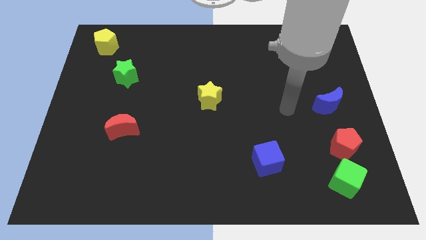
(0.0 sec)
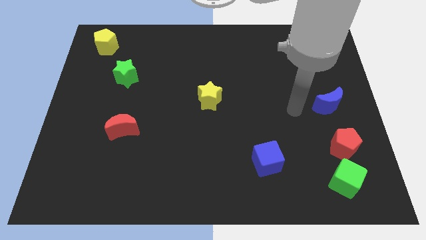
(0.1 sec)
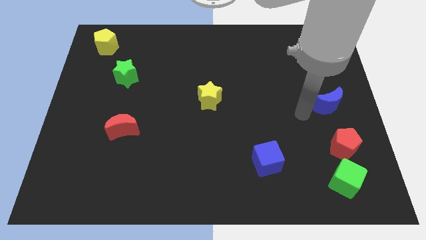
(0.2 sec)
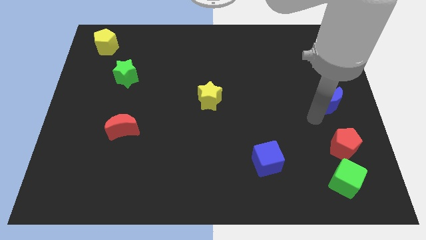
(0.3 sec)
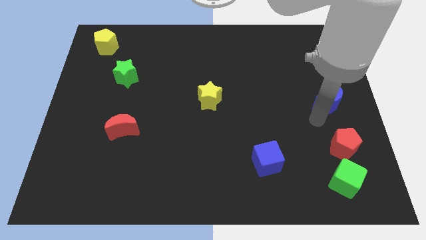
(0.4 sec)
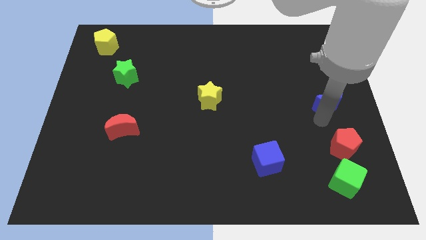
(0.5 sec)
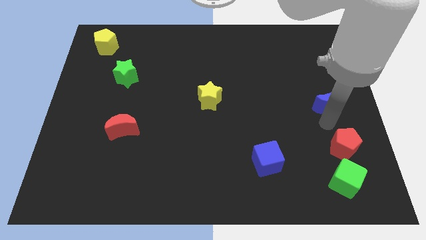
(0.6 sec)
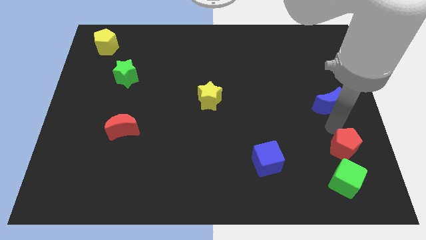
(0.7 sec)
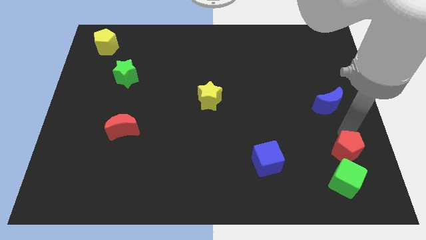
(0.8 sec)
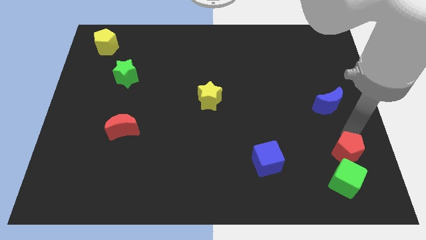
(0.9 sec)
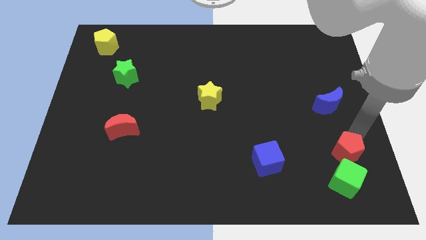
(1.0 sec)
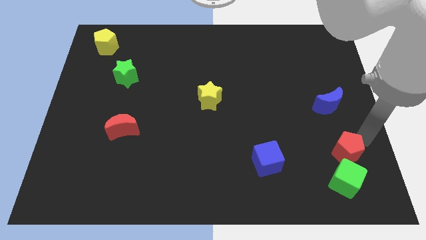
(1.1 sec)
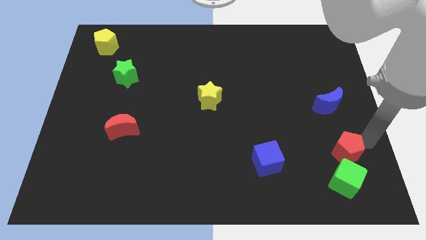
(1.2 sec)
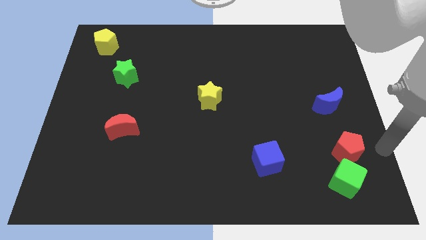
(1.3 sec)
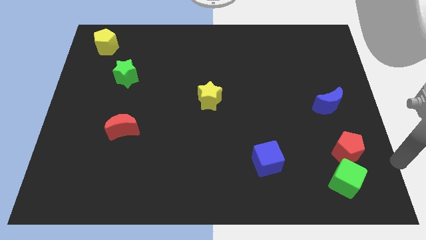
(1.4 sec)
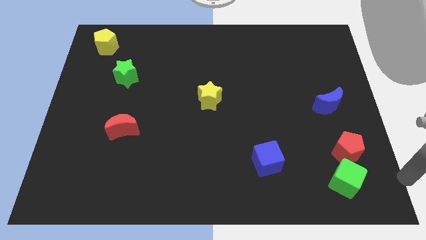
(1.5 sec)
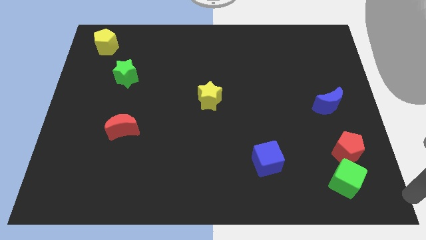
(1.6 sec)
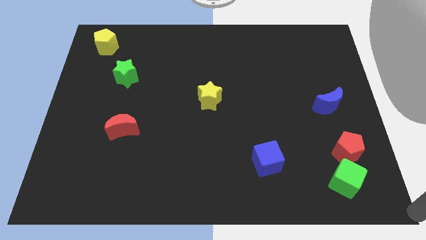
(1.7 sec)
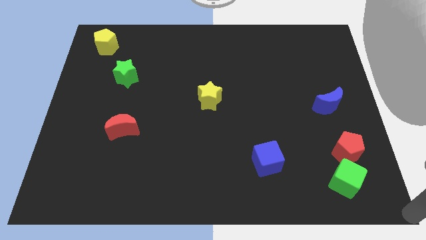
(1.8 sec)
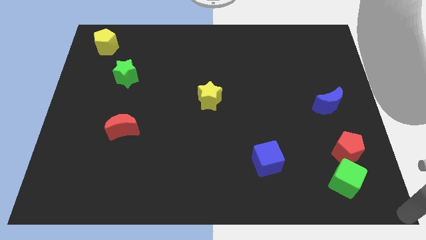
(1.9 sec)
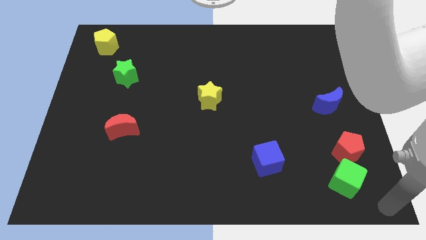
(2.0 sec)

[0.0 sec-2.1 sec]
move red pentagon slightly to the right of the board

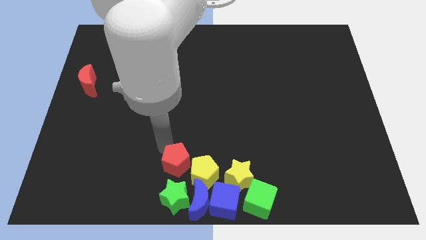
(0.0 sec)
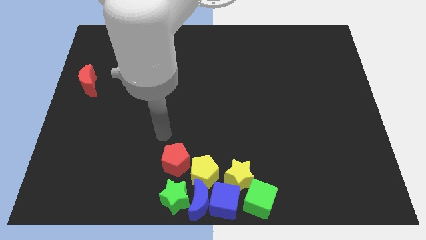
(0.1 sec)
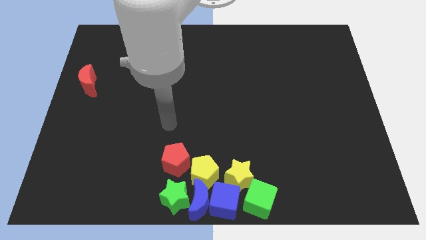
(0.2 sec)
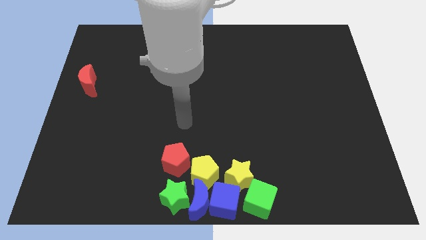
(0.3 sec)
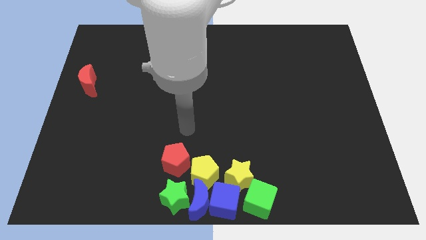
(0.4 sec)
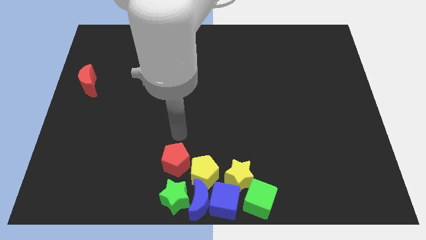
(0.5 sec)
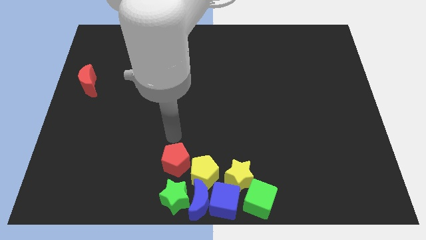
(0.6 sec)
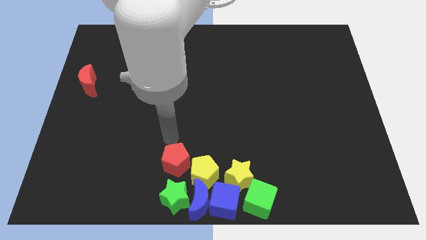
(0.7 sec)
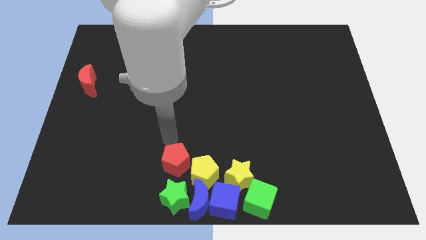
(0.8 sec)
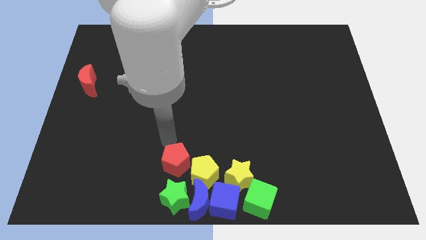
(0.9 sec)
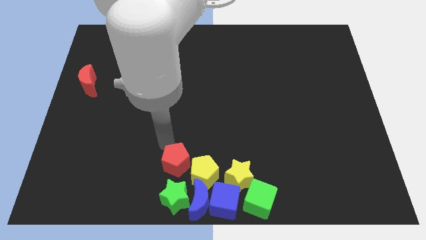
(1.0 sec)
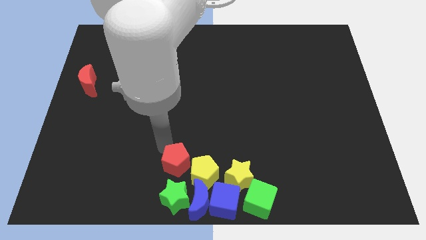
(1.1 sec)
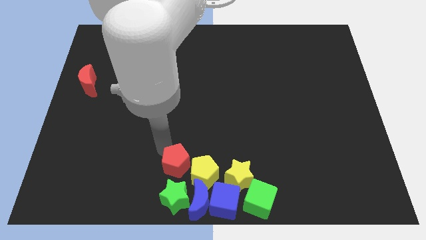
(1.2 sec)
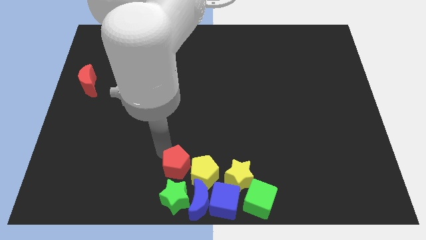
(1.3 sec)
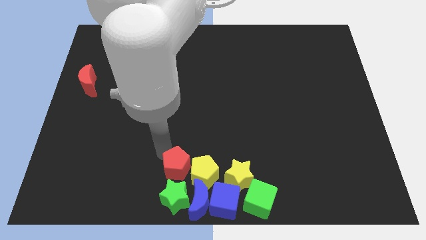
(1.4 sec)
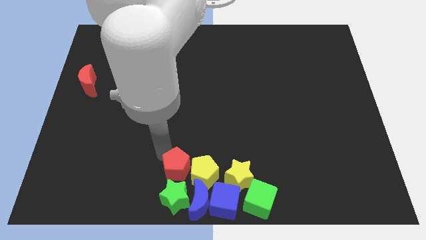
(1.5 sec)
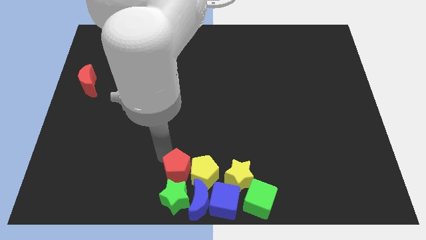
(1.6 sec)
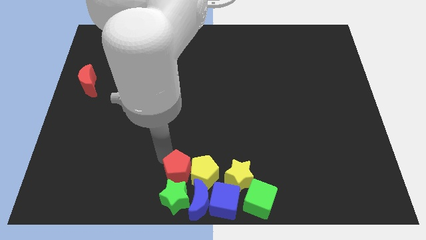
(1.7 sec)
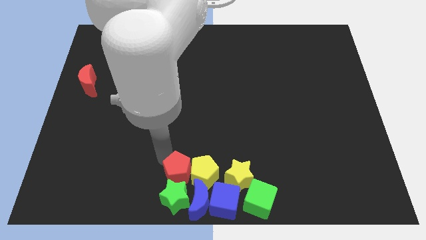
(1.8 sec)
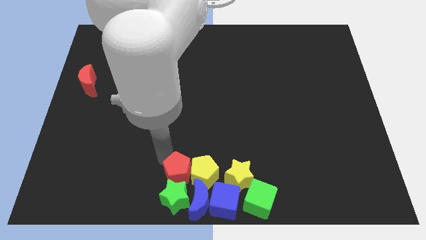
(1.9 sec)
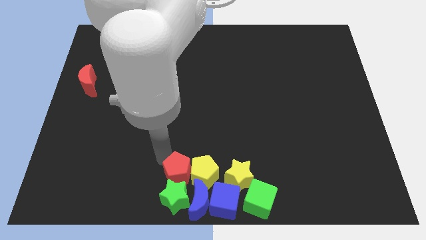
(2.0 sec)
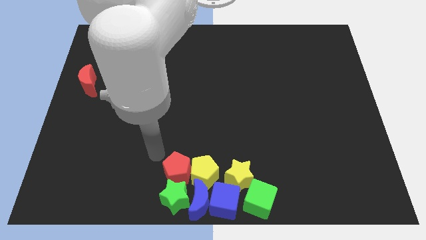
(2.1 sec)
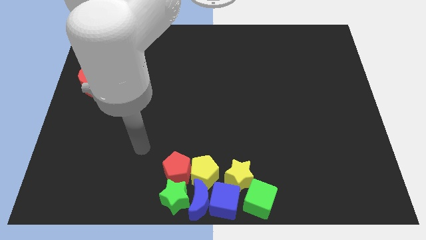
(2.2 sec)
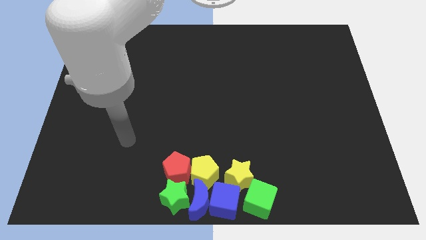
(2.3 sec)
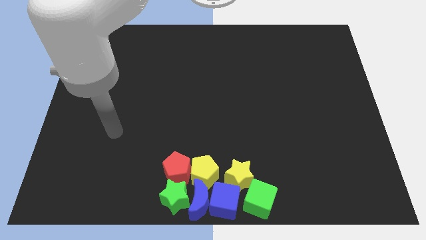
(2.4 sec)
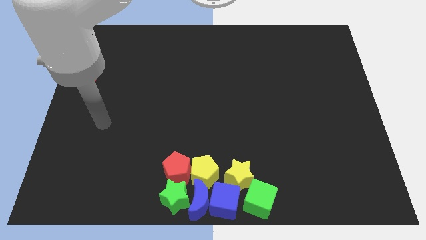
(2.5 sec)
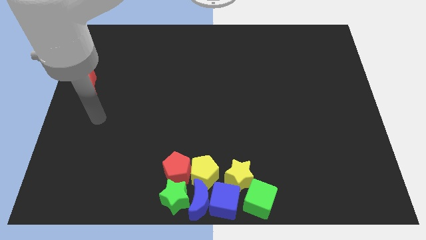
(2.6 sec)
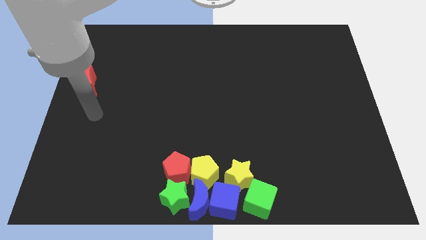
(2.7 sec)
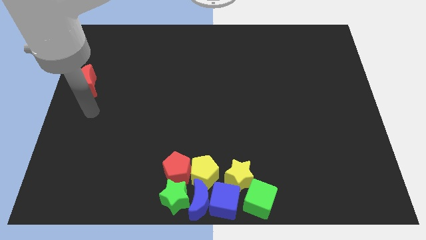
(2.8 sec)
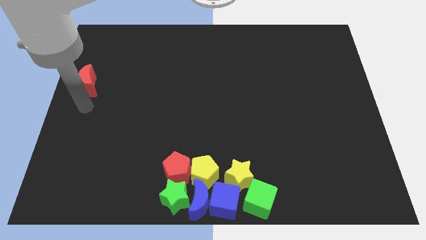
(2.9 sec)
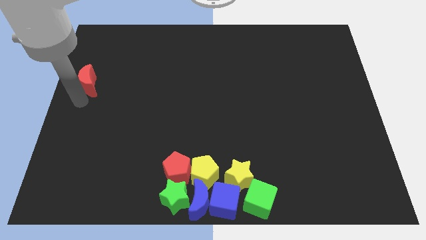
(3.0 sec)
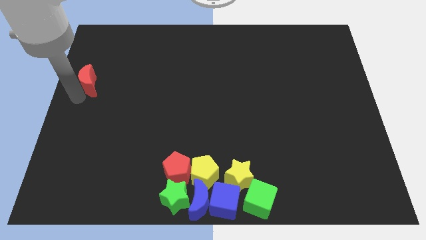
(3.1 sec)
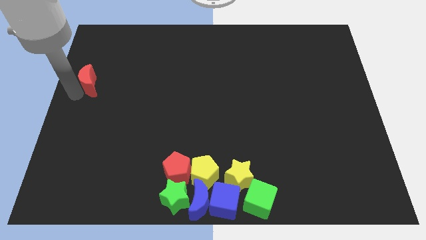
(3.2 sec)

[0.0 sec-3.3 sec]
push the red pentagon into the green star

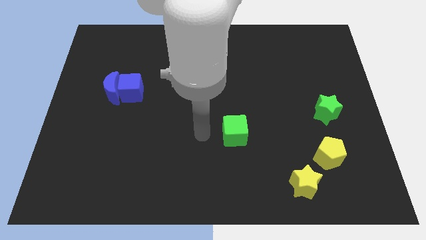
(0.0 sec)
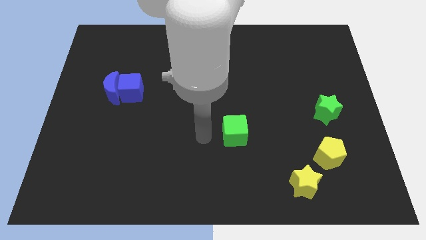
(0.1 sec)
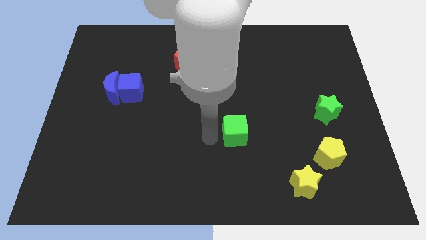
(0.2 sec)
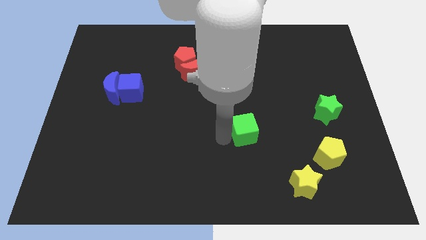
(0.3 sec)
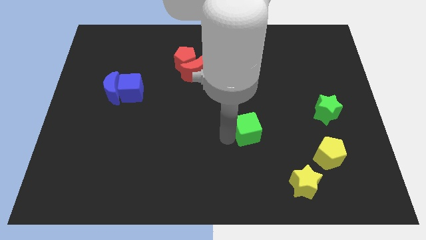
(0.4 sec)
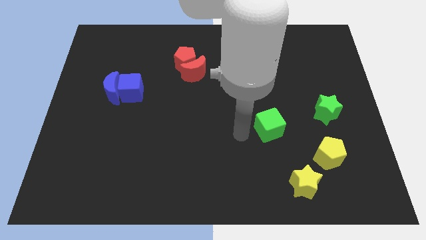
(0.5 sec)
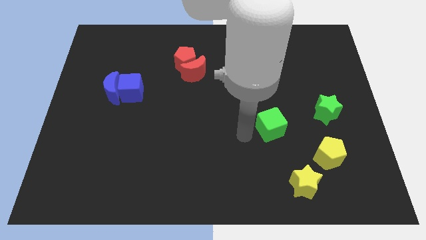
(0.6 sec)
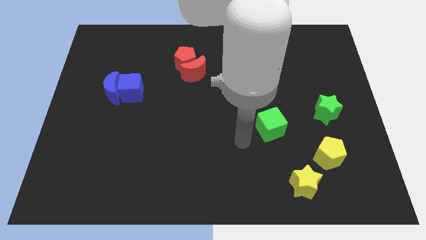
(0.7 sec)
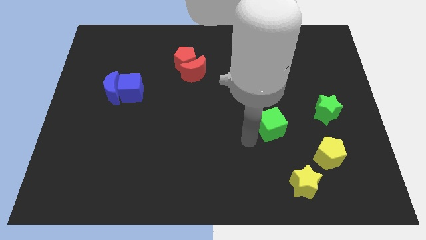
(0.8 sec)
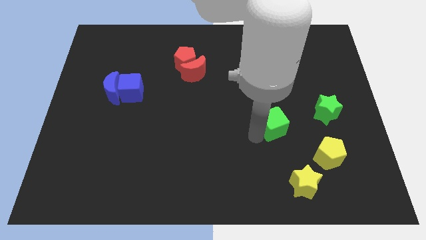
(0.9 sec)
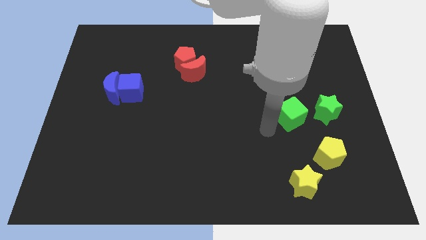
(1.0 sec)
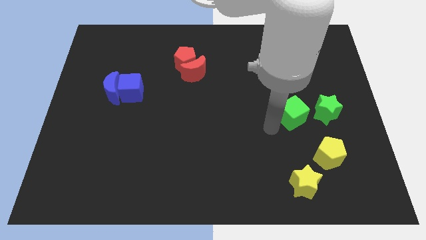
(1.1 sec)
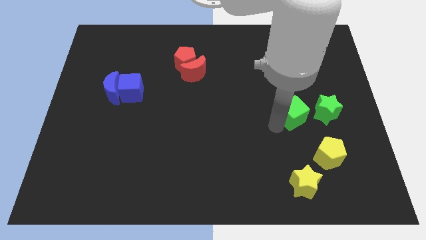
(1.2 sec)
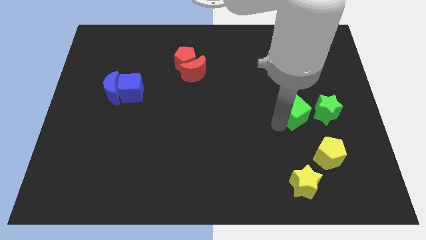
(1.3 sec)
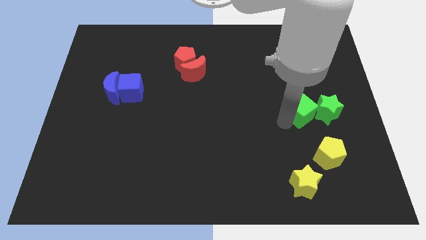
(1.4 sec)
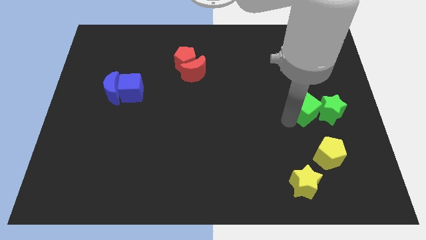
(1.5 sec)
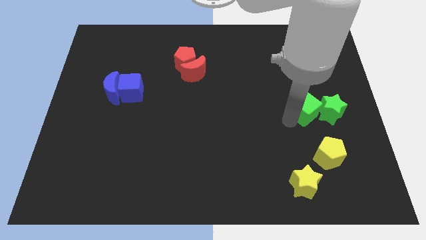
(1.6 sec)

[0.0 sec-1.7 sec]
move the green cube into the green star

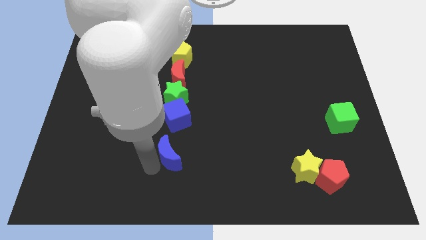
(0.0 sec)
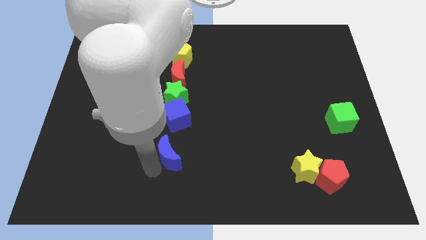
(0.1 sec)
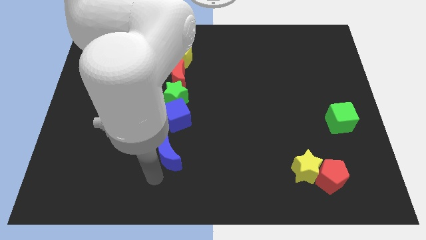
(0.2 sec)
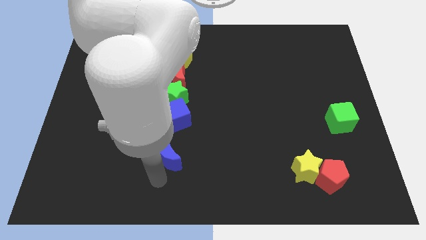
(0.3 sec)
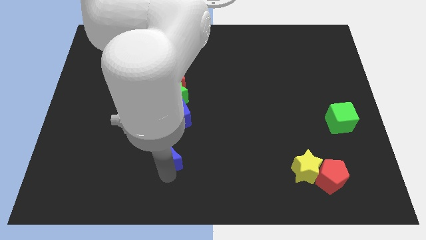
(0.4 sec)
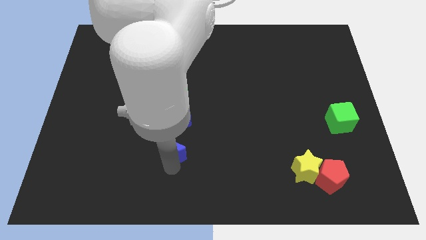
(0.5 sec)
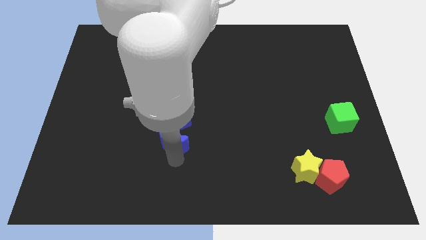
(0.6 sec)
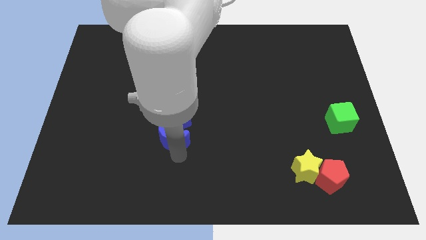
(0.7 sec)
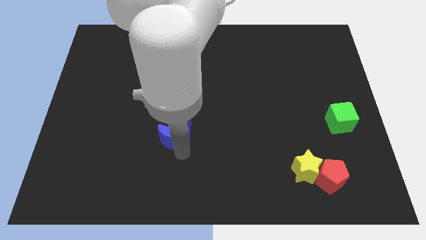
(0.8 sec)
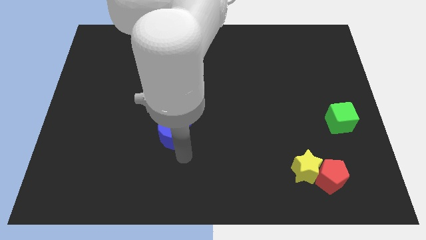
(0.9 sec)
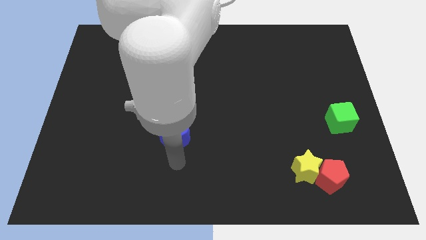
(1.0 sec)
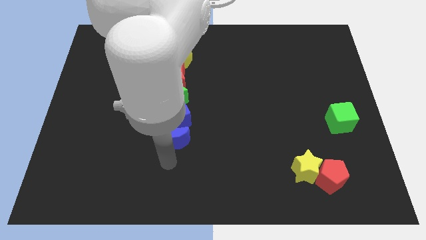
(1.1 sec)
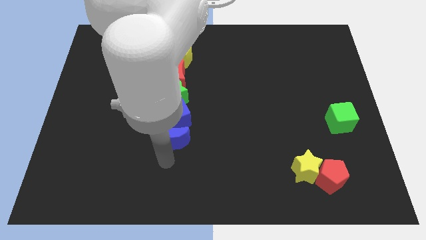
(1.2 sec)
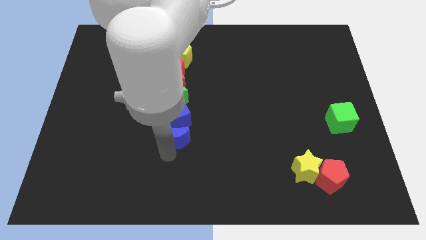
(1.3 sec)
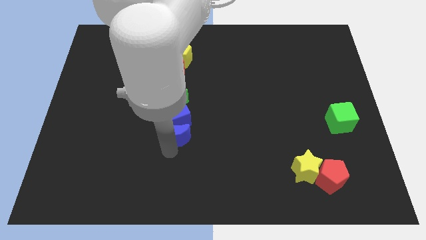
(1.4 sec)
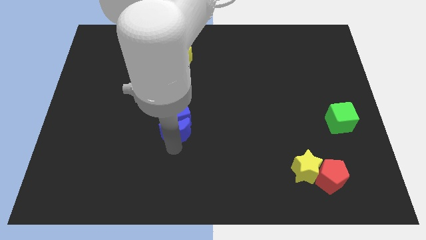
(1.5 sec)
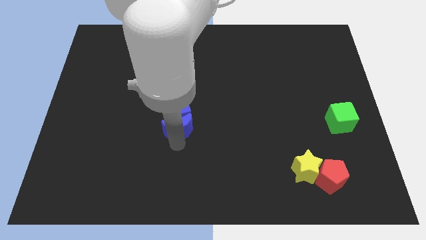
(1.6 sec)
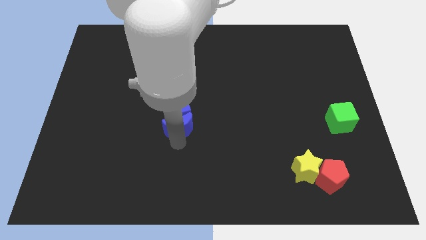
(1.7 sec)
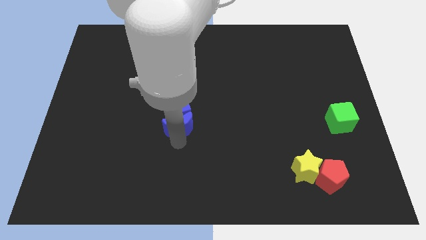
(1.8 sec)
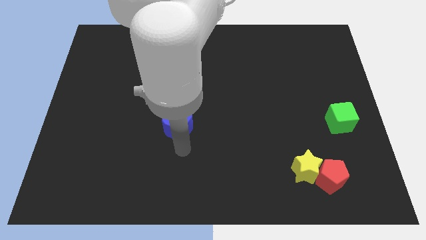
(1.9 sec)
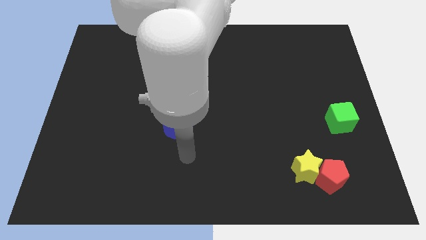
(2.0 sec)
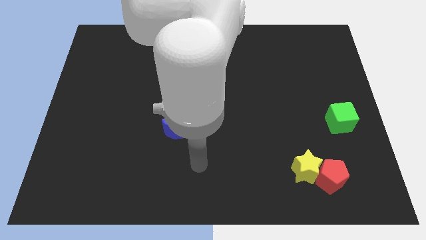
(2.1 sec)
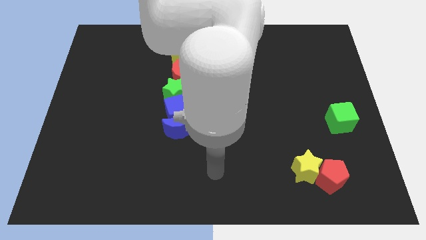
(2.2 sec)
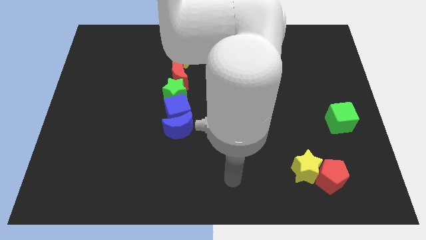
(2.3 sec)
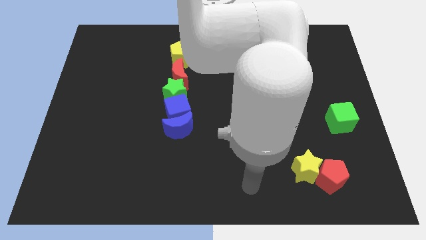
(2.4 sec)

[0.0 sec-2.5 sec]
push the blue crescent into blue cube
